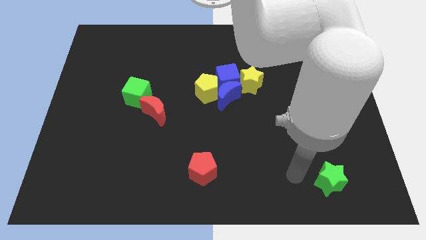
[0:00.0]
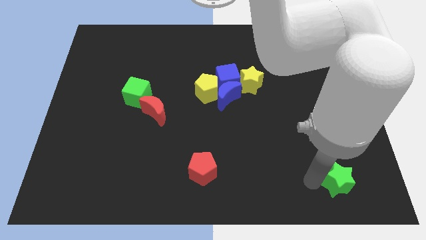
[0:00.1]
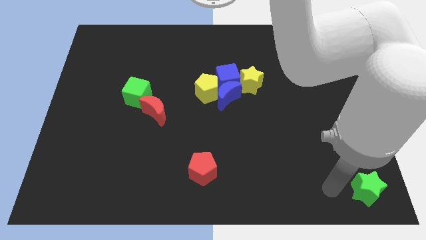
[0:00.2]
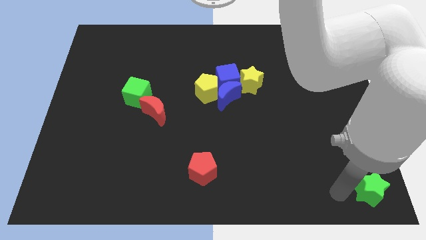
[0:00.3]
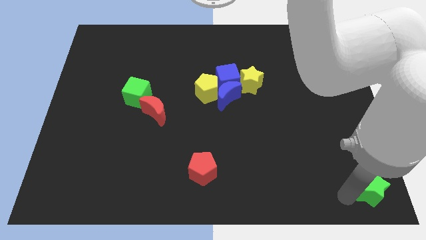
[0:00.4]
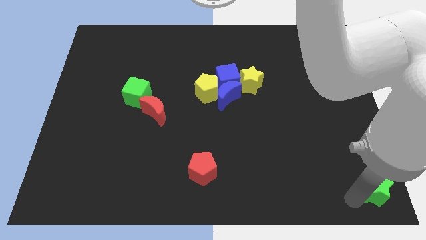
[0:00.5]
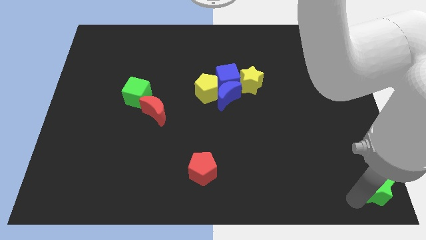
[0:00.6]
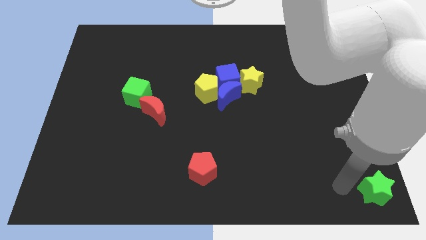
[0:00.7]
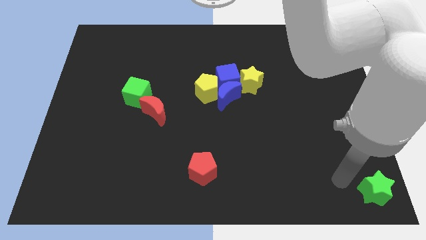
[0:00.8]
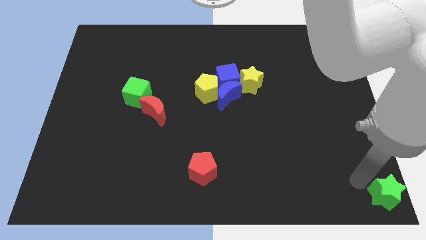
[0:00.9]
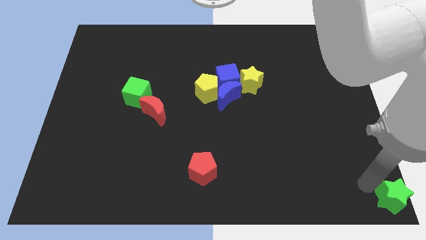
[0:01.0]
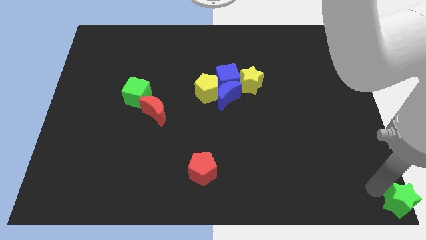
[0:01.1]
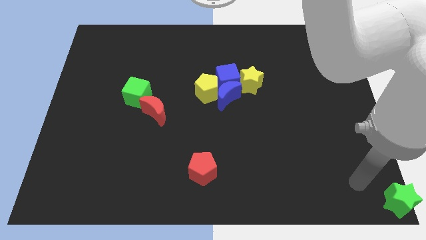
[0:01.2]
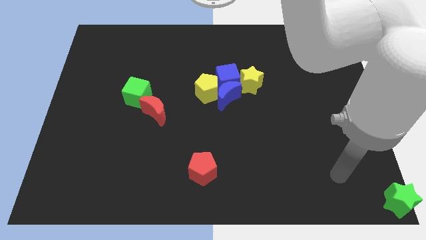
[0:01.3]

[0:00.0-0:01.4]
move the green star to the bottom right corner of the board

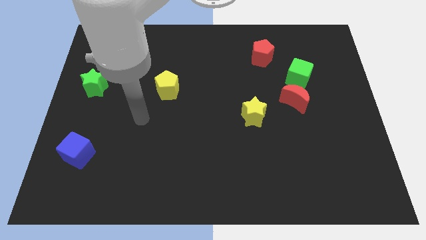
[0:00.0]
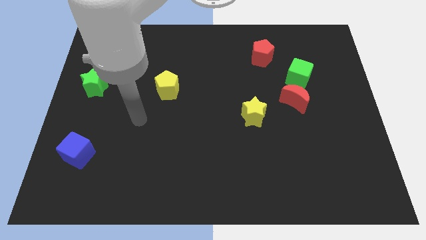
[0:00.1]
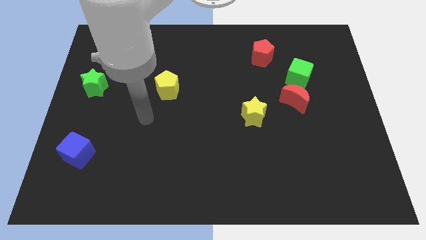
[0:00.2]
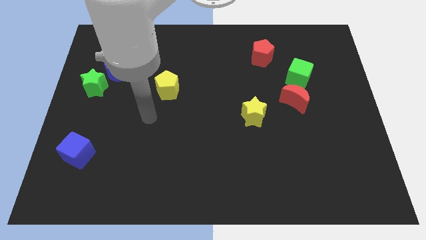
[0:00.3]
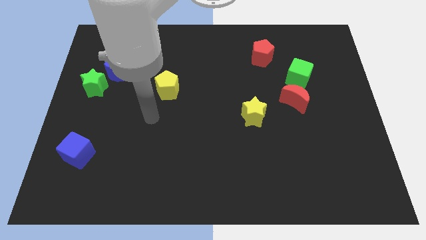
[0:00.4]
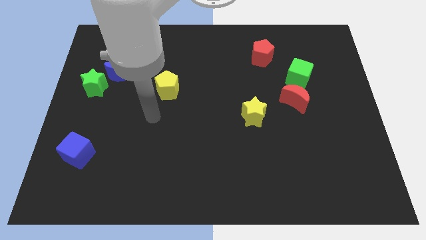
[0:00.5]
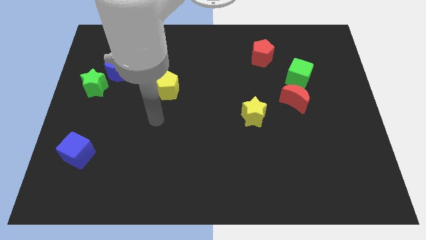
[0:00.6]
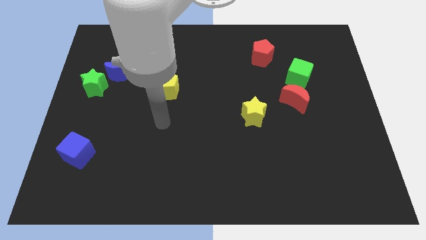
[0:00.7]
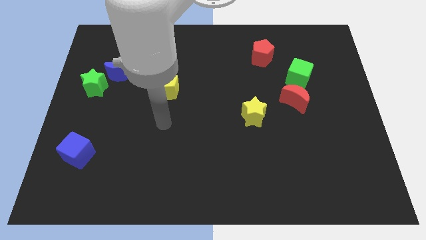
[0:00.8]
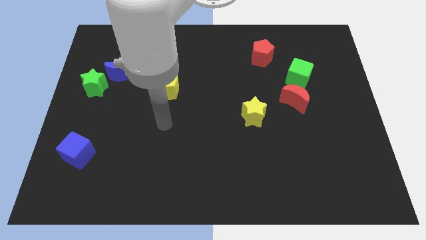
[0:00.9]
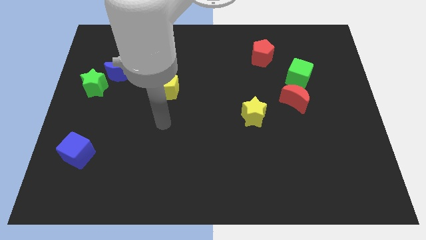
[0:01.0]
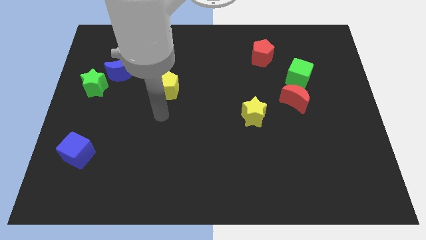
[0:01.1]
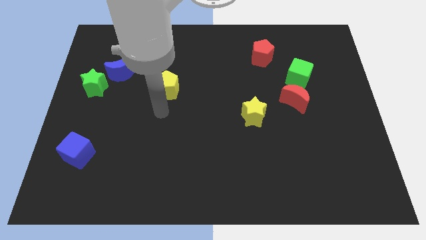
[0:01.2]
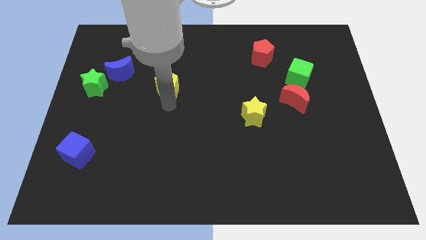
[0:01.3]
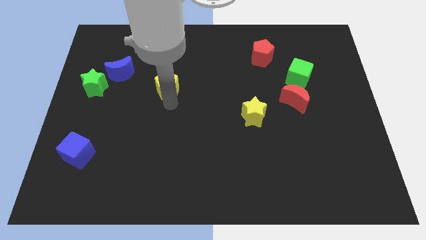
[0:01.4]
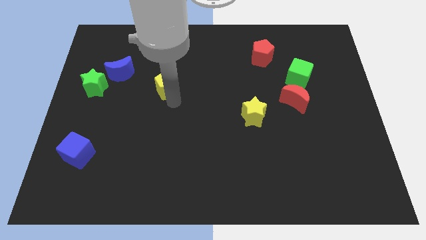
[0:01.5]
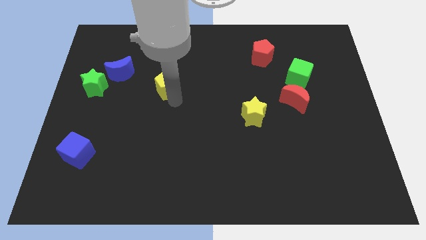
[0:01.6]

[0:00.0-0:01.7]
touch the bottom of the yellow pentagon

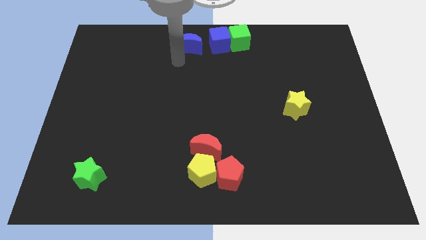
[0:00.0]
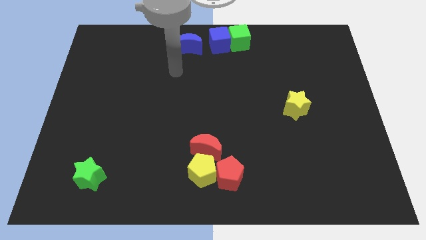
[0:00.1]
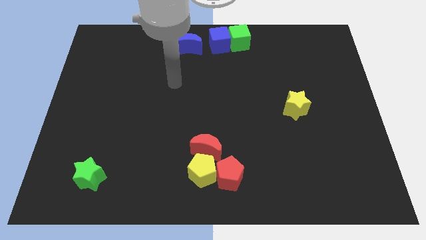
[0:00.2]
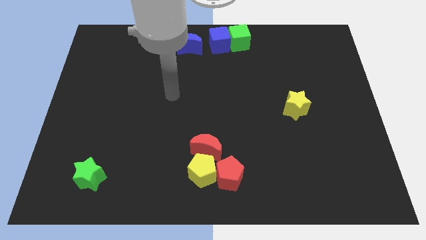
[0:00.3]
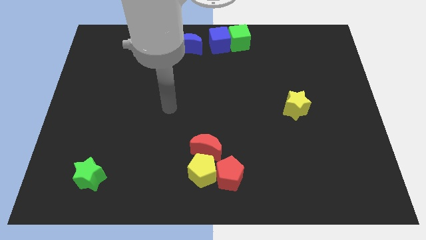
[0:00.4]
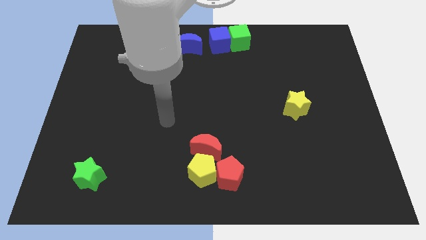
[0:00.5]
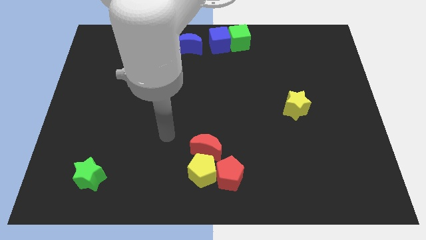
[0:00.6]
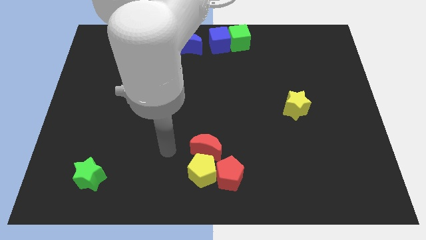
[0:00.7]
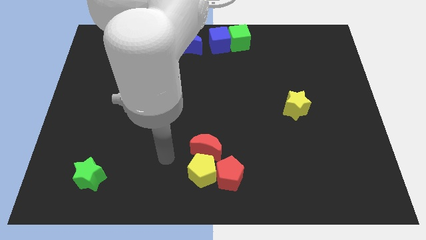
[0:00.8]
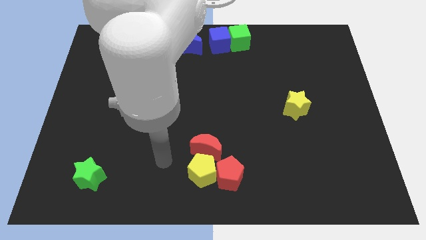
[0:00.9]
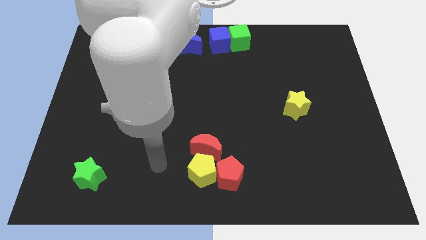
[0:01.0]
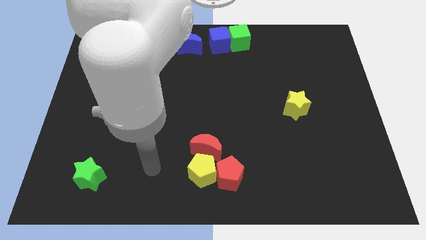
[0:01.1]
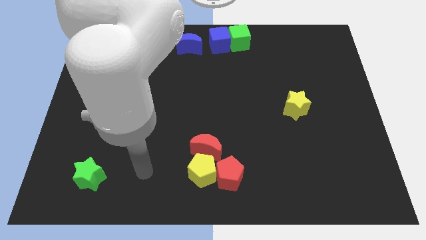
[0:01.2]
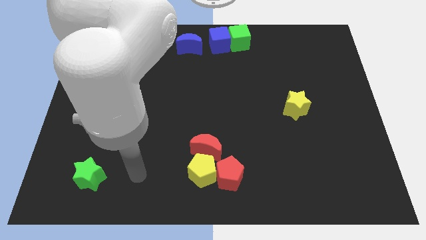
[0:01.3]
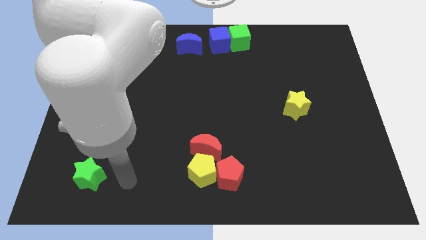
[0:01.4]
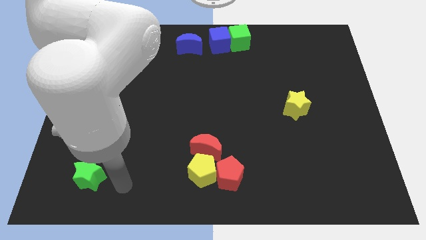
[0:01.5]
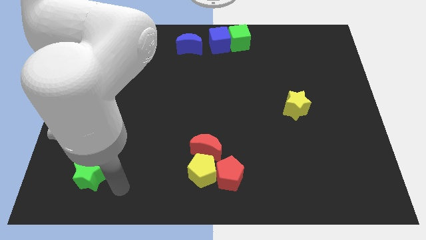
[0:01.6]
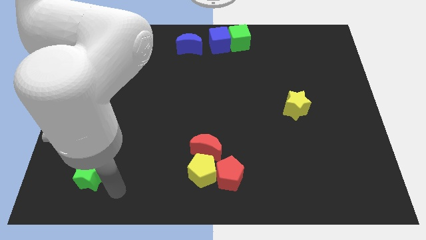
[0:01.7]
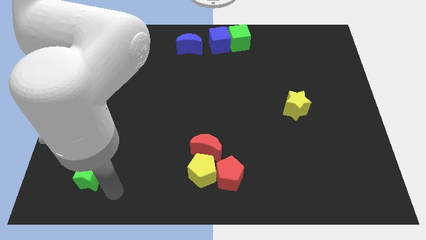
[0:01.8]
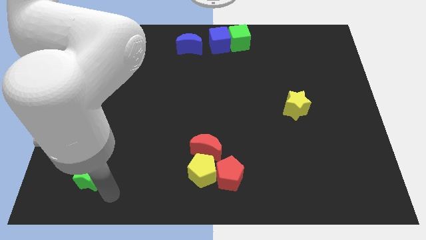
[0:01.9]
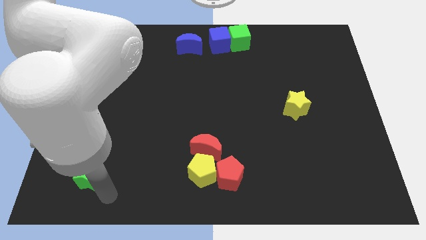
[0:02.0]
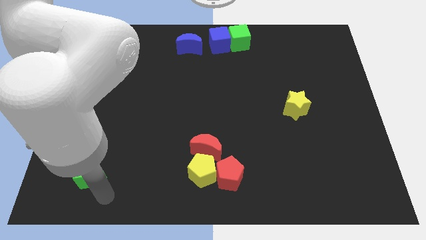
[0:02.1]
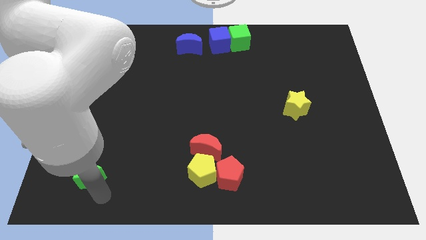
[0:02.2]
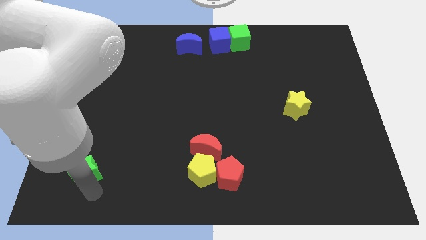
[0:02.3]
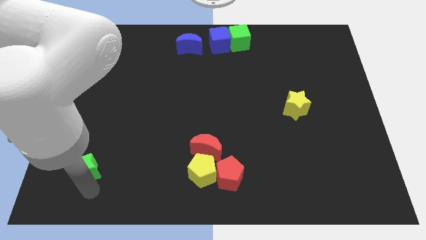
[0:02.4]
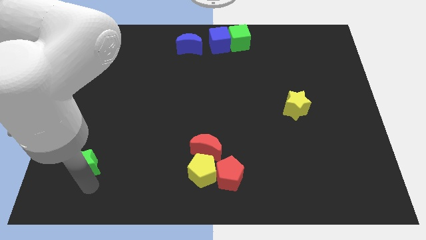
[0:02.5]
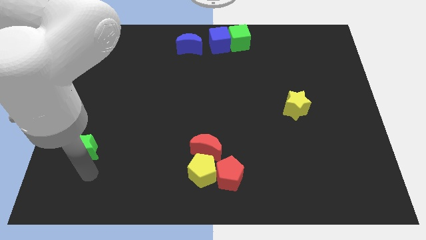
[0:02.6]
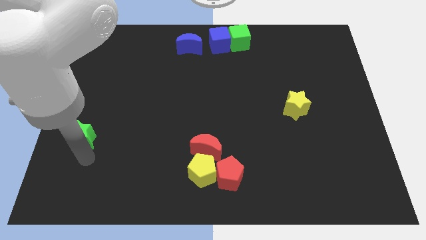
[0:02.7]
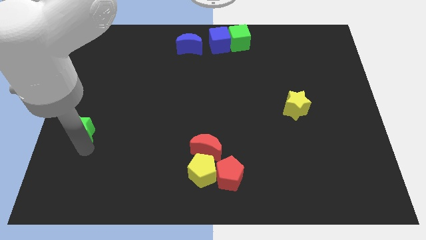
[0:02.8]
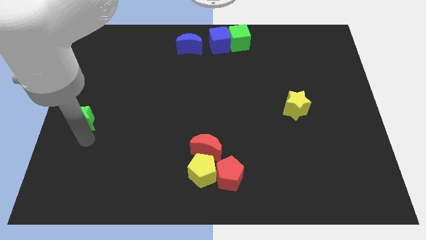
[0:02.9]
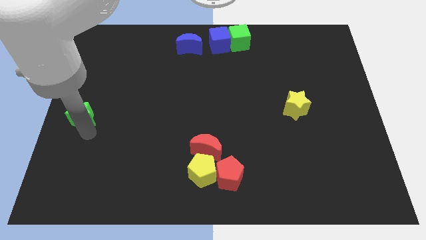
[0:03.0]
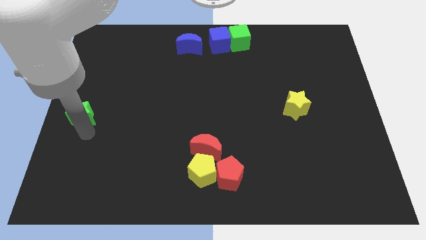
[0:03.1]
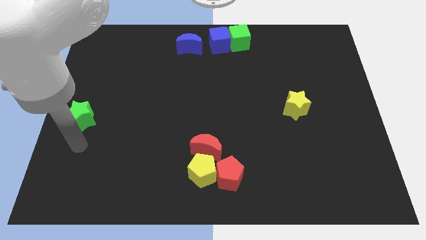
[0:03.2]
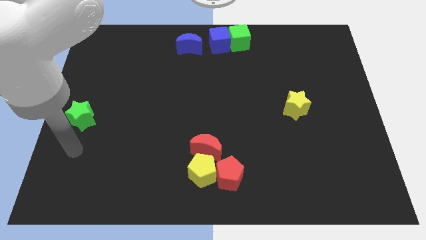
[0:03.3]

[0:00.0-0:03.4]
move the green star to the left side of the table

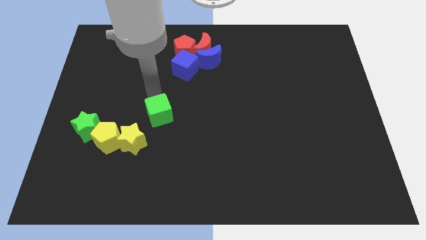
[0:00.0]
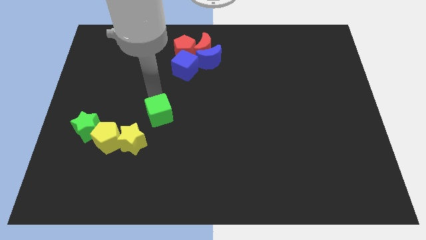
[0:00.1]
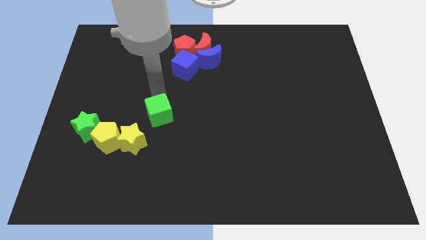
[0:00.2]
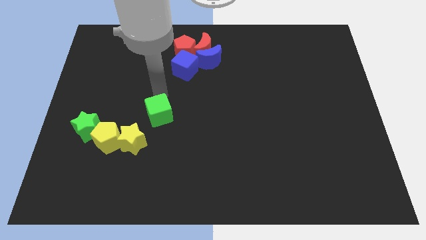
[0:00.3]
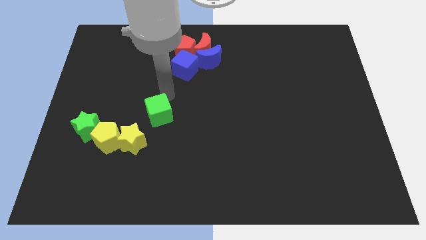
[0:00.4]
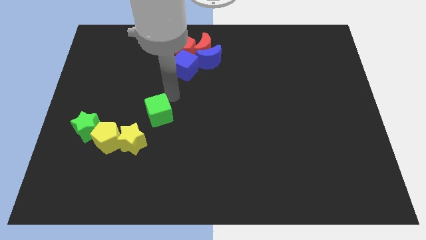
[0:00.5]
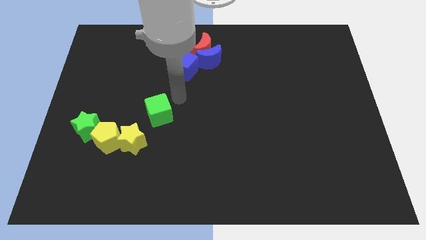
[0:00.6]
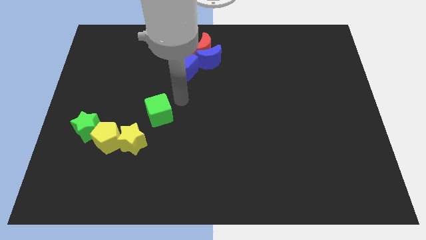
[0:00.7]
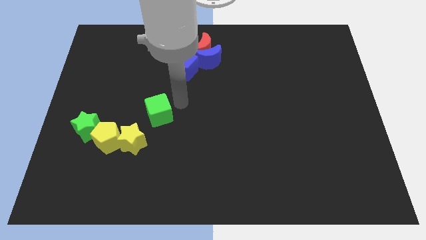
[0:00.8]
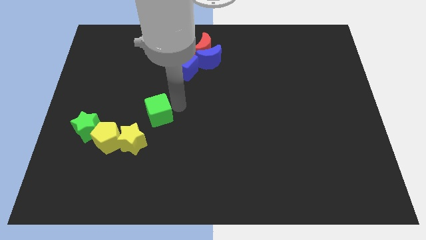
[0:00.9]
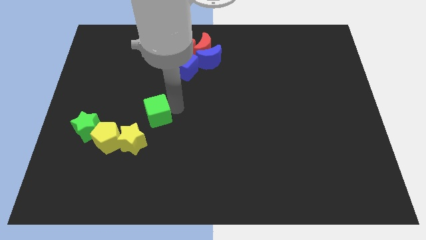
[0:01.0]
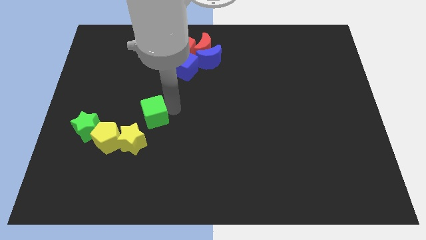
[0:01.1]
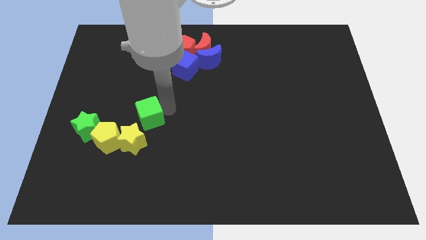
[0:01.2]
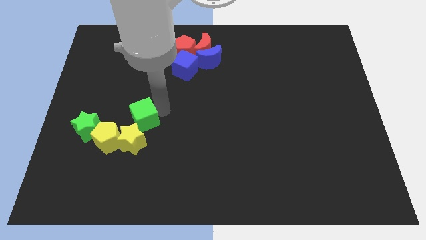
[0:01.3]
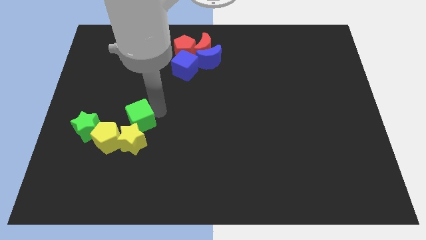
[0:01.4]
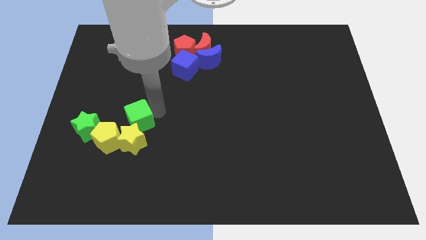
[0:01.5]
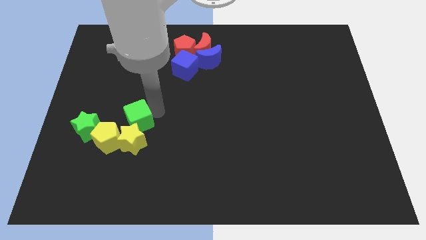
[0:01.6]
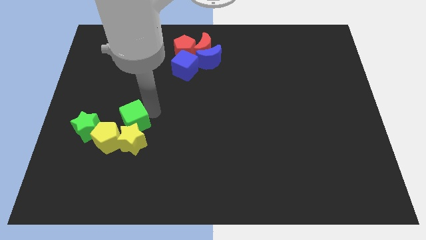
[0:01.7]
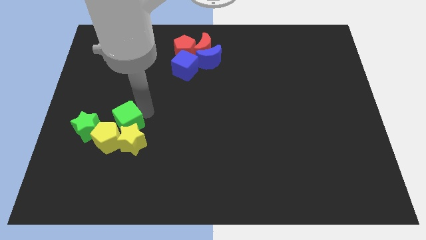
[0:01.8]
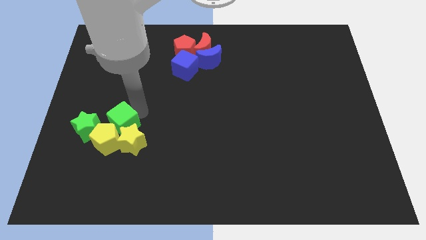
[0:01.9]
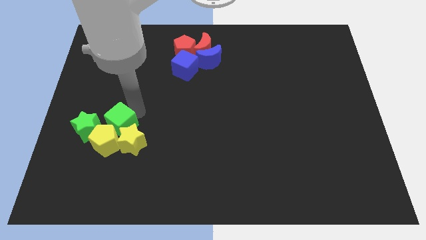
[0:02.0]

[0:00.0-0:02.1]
push the green cube into the top side of the yellow pentagon

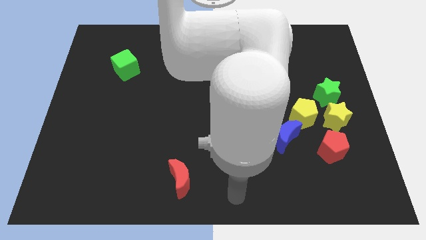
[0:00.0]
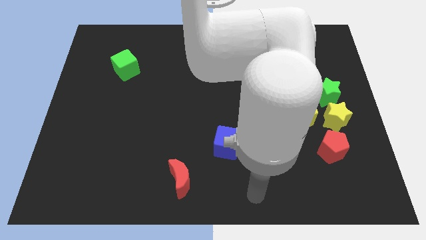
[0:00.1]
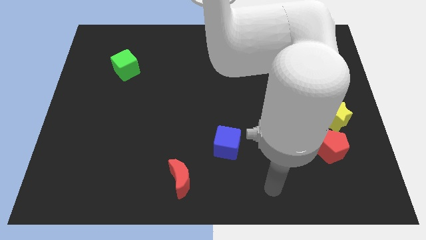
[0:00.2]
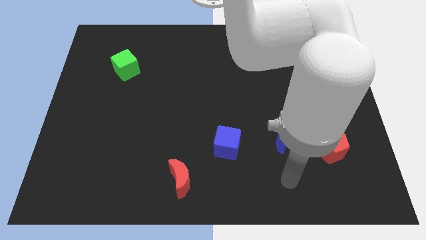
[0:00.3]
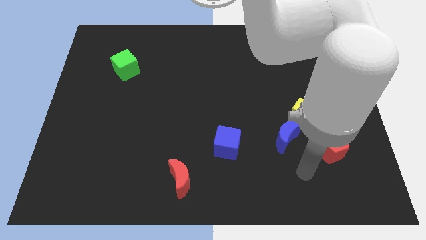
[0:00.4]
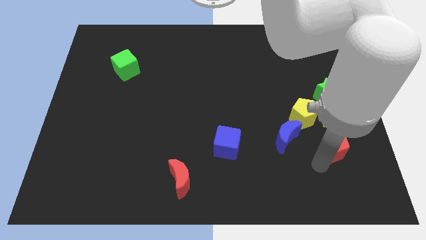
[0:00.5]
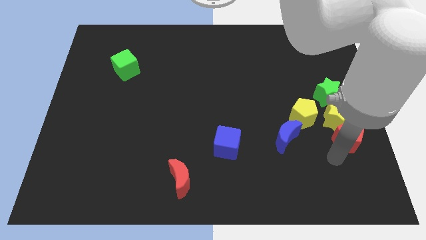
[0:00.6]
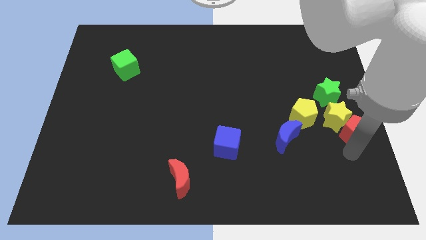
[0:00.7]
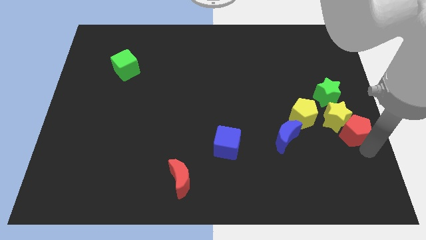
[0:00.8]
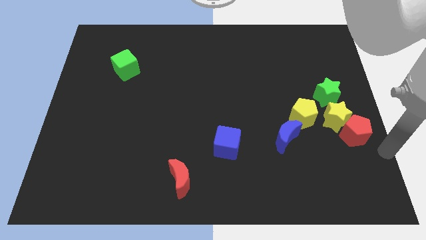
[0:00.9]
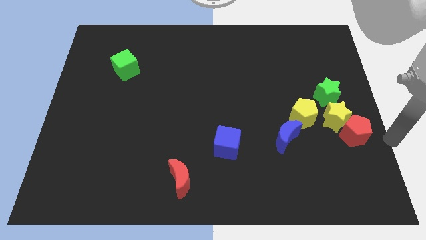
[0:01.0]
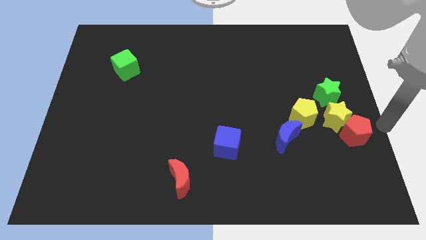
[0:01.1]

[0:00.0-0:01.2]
push the red pentagon diagonally bottom right to the yellow star
